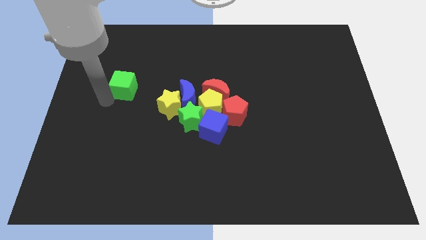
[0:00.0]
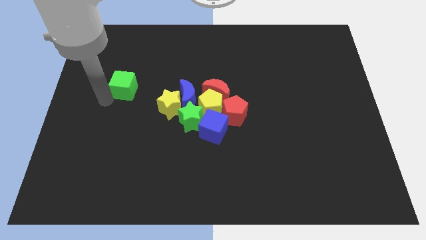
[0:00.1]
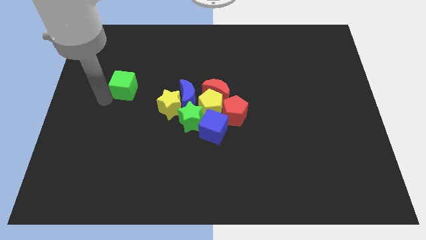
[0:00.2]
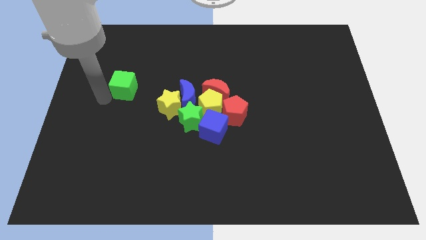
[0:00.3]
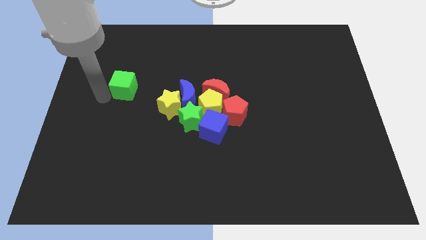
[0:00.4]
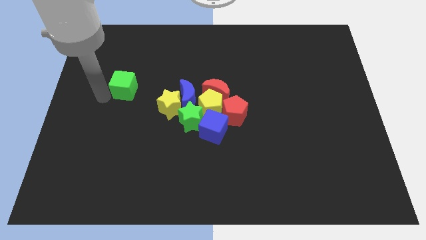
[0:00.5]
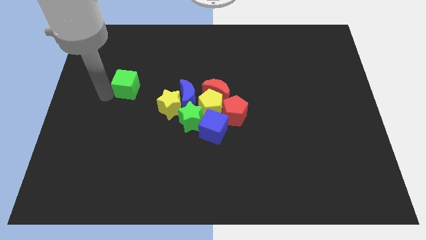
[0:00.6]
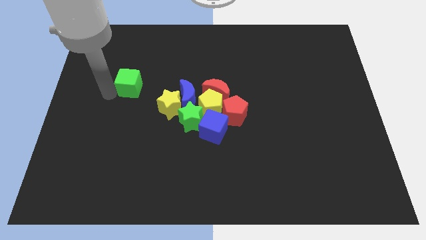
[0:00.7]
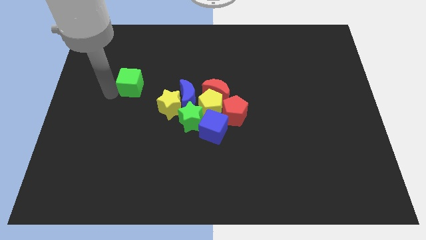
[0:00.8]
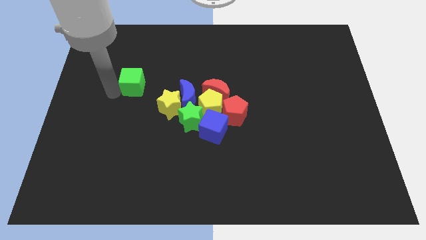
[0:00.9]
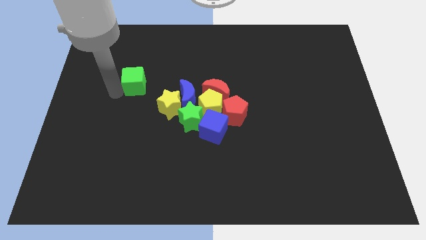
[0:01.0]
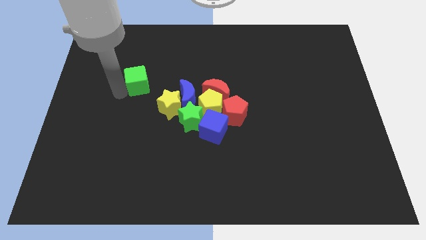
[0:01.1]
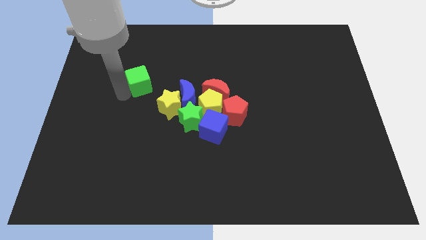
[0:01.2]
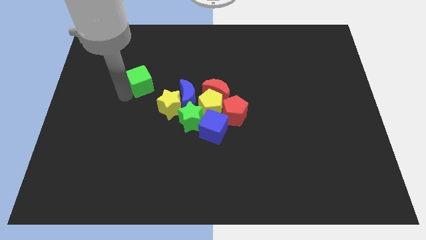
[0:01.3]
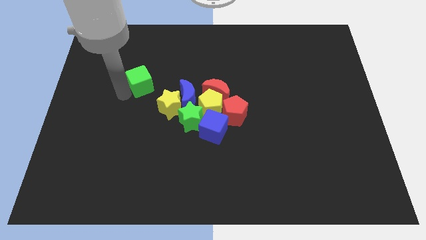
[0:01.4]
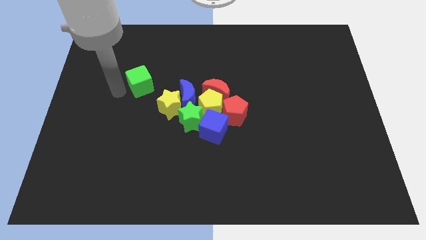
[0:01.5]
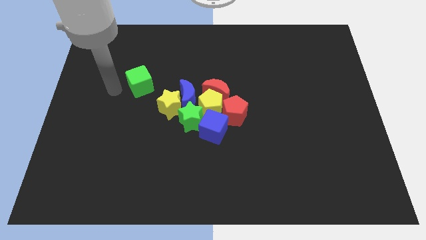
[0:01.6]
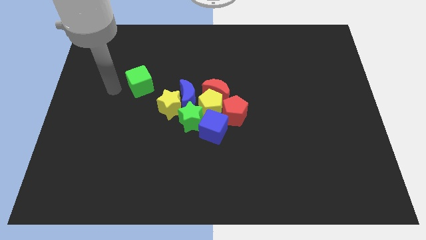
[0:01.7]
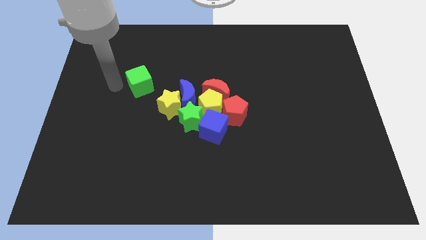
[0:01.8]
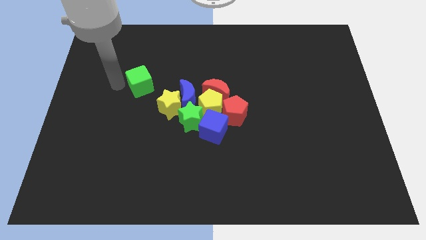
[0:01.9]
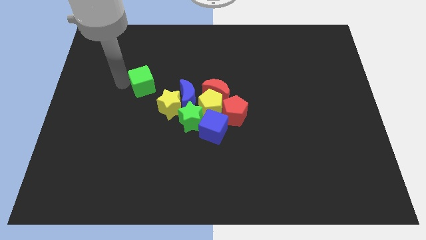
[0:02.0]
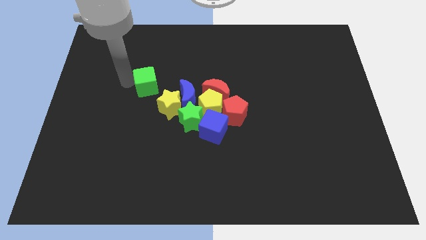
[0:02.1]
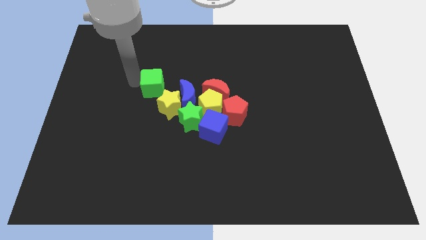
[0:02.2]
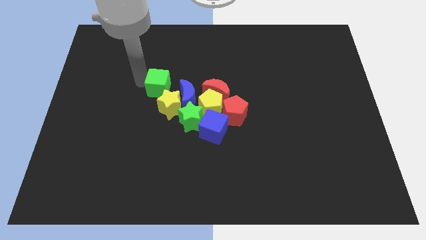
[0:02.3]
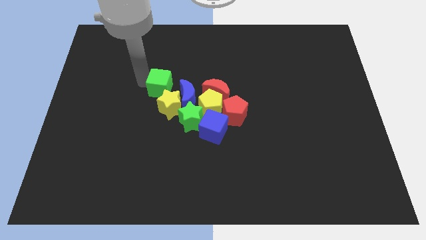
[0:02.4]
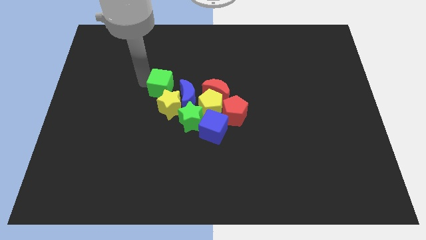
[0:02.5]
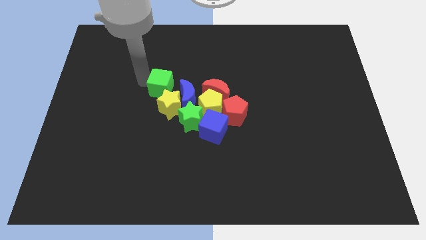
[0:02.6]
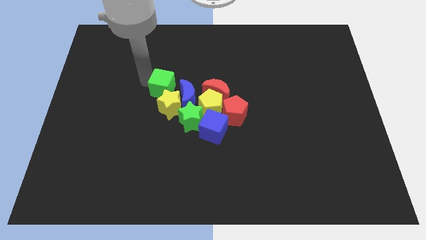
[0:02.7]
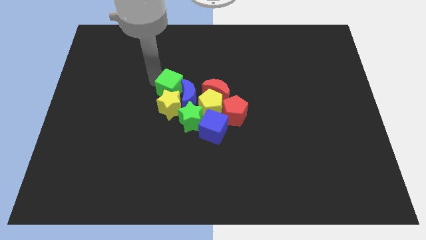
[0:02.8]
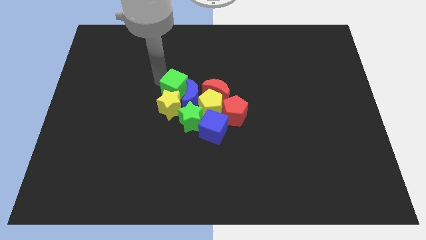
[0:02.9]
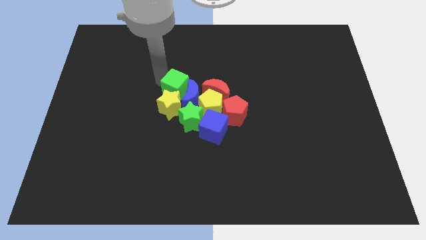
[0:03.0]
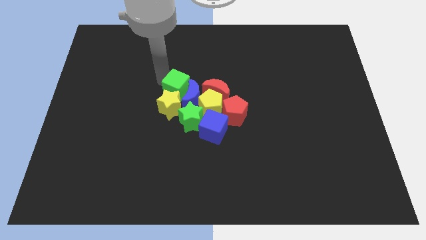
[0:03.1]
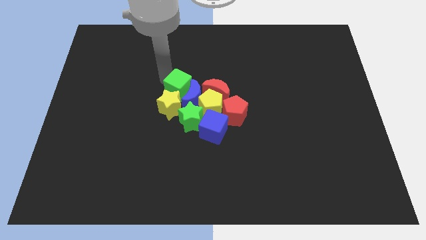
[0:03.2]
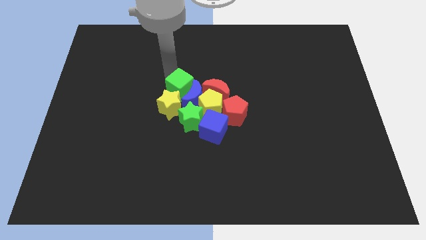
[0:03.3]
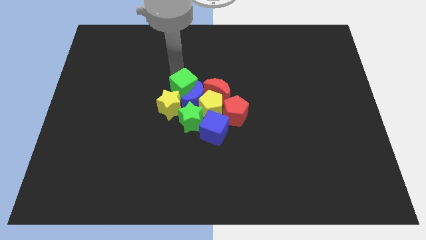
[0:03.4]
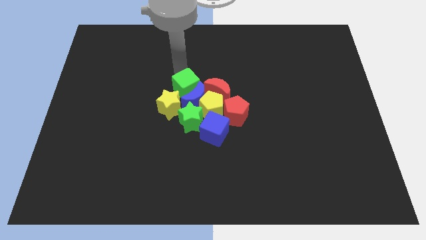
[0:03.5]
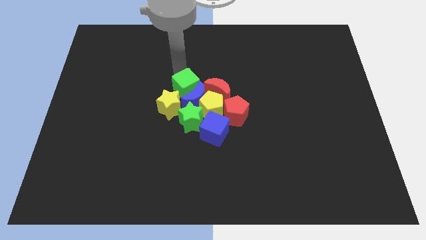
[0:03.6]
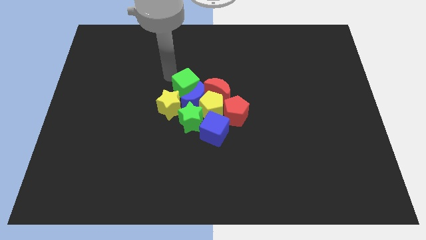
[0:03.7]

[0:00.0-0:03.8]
add the green cube to the group of blocks

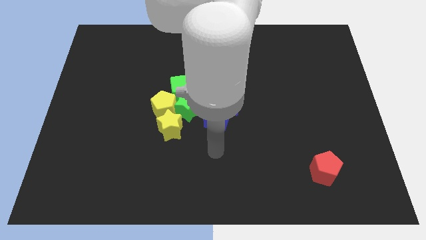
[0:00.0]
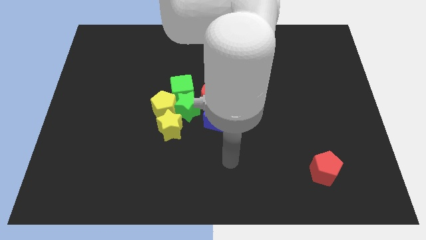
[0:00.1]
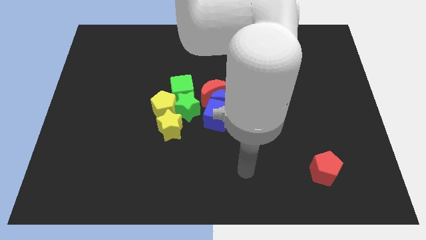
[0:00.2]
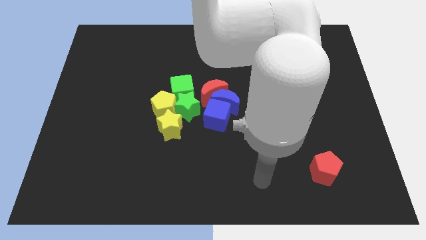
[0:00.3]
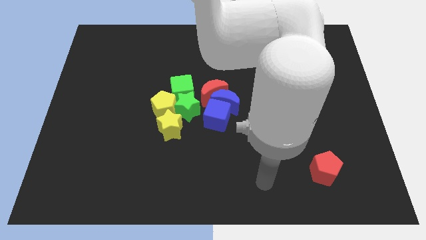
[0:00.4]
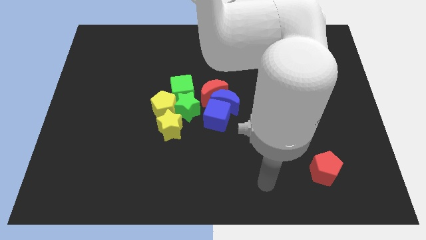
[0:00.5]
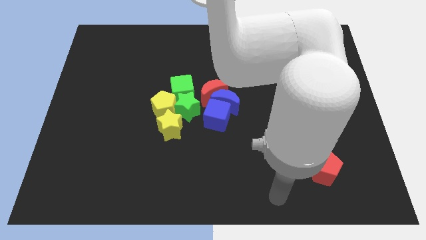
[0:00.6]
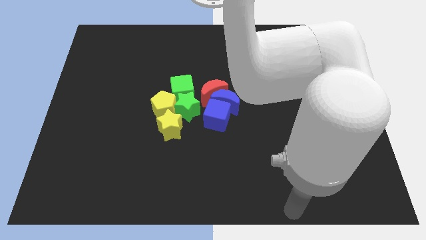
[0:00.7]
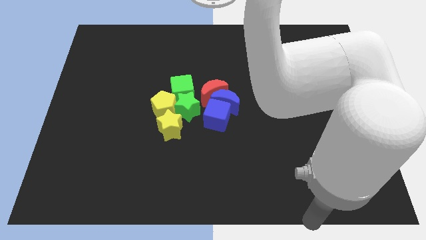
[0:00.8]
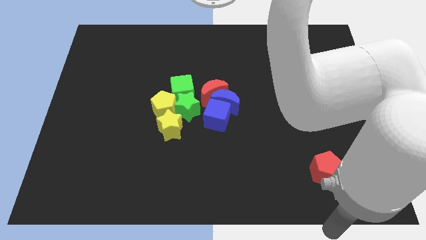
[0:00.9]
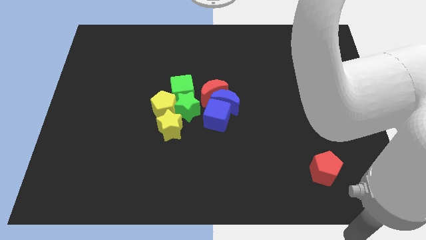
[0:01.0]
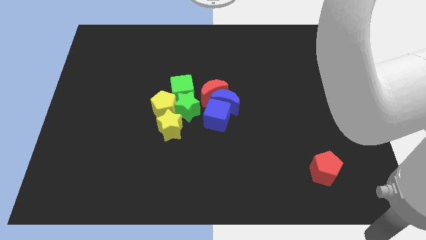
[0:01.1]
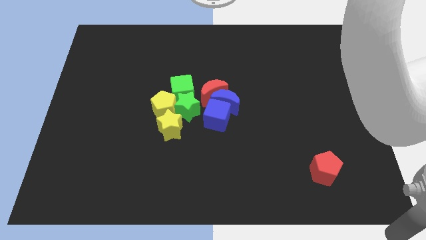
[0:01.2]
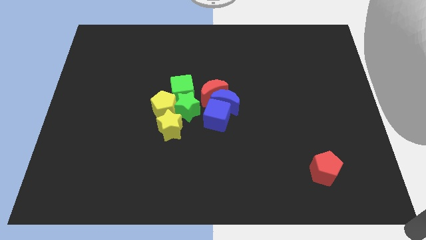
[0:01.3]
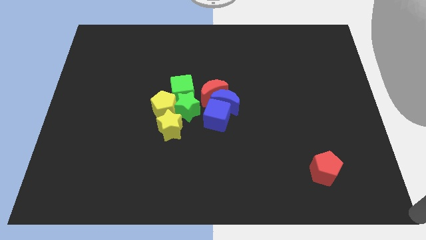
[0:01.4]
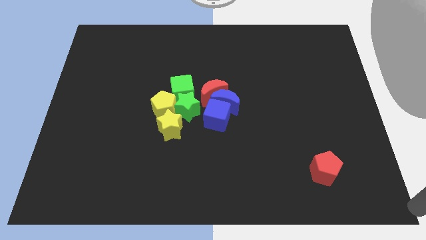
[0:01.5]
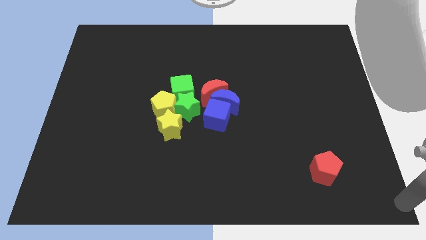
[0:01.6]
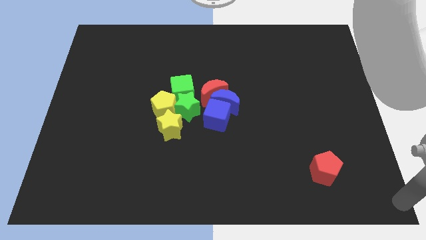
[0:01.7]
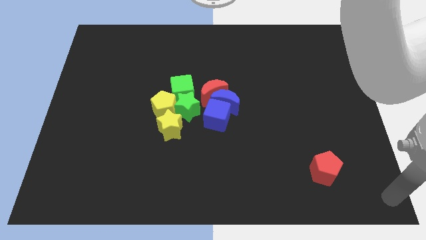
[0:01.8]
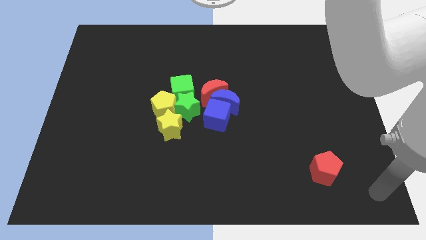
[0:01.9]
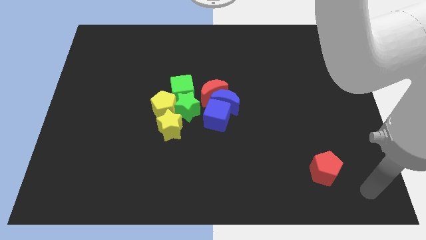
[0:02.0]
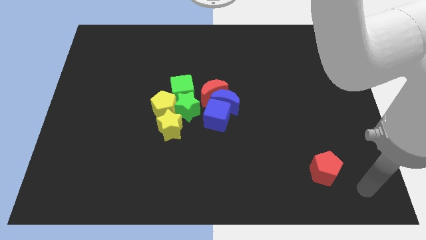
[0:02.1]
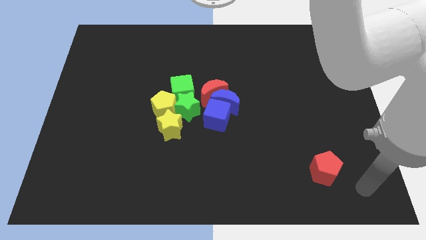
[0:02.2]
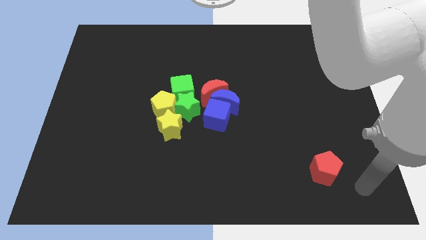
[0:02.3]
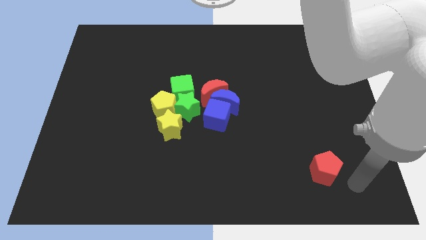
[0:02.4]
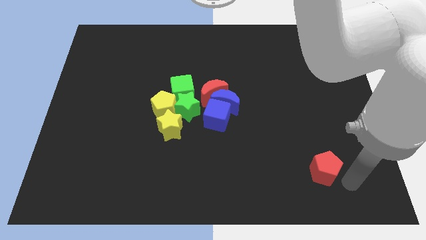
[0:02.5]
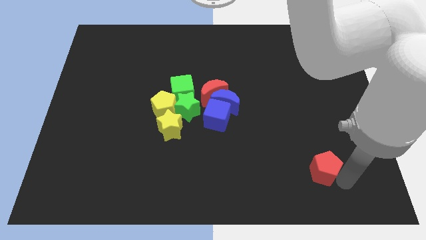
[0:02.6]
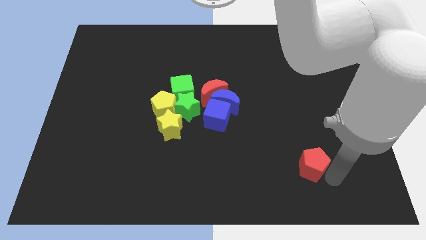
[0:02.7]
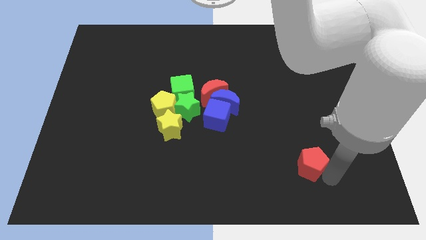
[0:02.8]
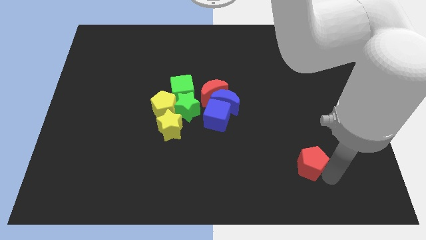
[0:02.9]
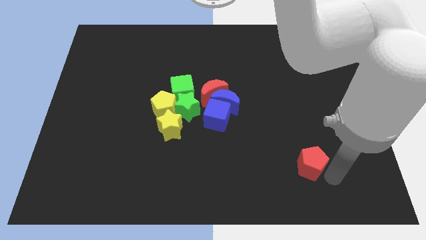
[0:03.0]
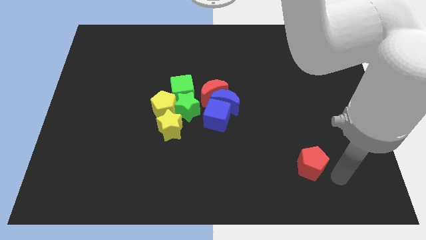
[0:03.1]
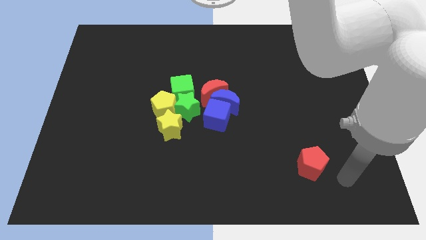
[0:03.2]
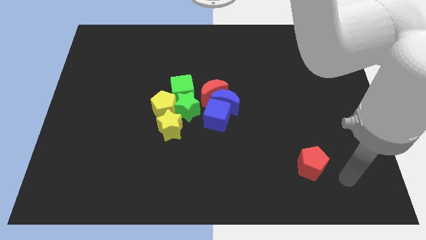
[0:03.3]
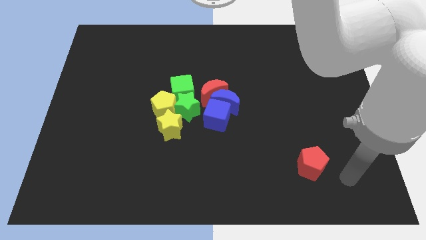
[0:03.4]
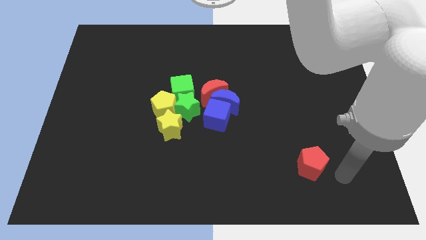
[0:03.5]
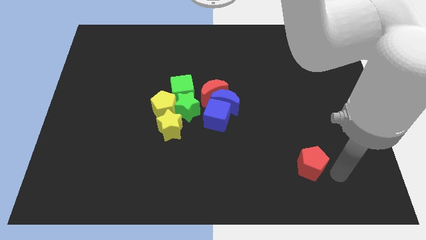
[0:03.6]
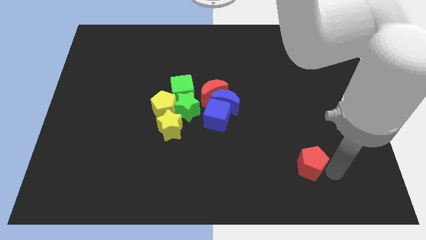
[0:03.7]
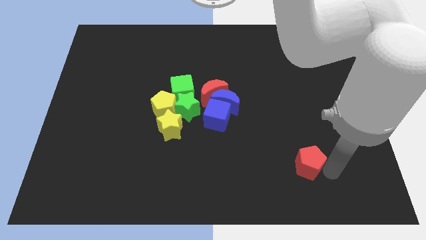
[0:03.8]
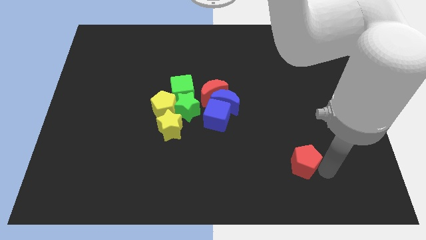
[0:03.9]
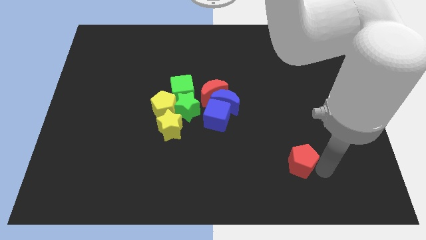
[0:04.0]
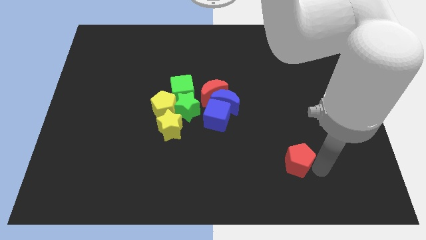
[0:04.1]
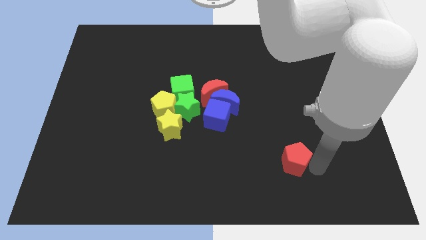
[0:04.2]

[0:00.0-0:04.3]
move the red pentagon to the left of the board

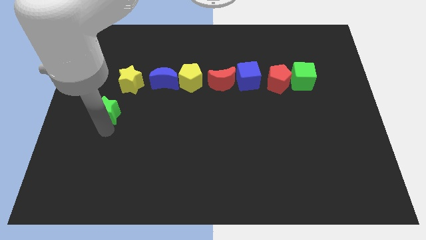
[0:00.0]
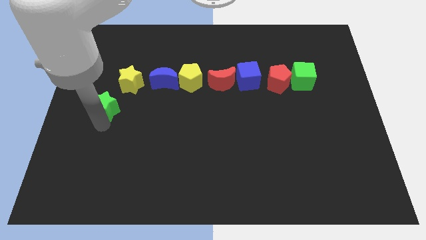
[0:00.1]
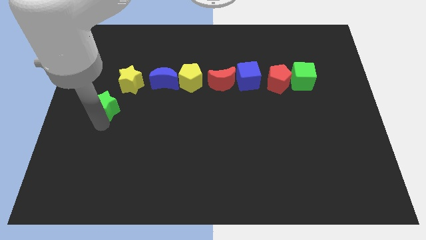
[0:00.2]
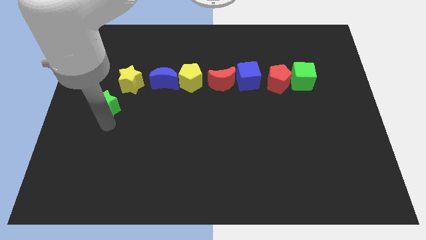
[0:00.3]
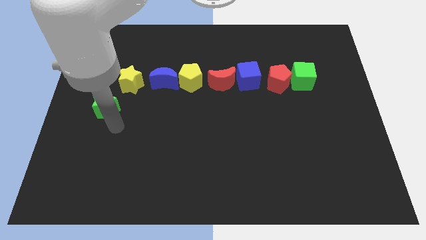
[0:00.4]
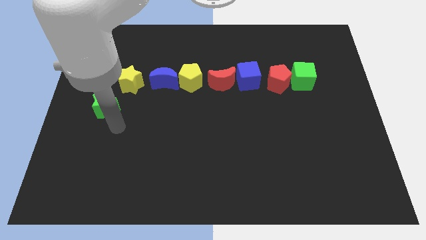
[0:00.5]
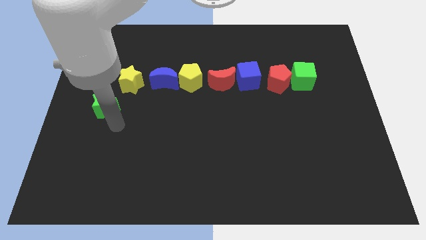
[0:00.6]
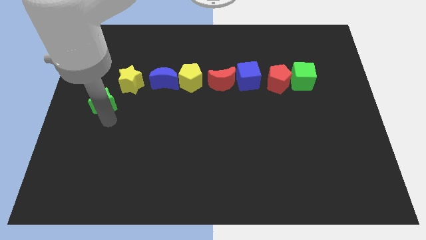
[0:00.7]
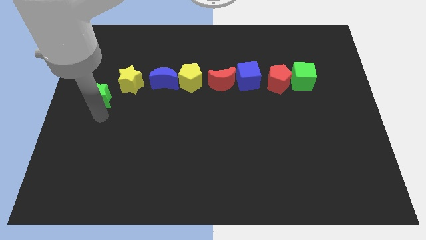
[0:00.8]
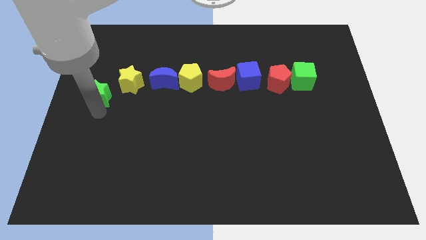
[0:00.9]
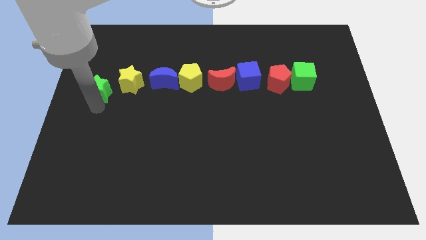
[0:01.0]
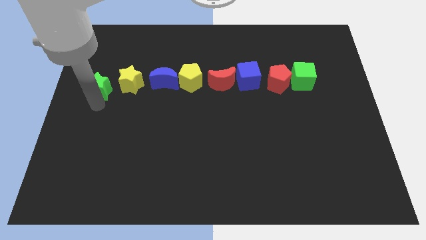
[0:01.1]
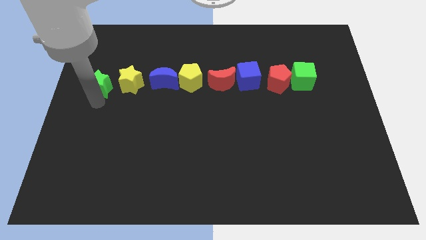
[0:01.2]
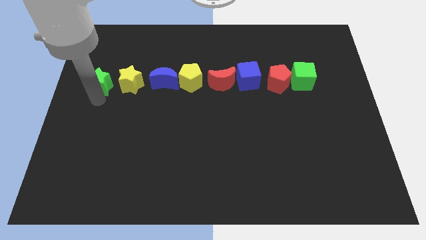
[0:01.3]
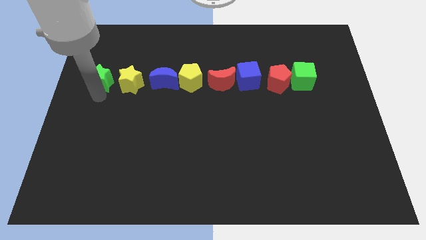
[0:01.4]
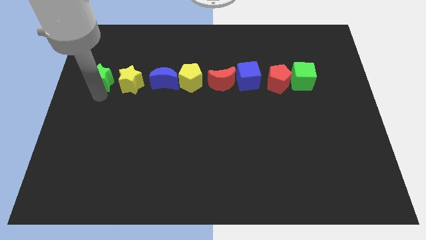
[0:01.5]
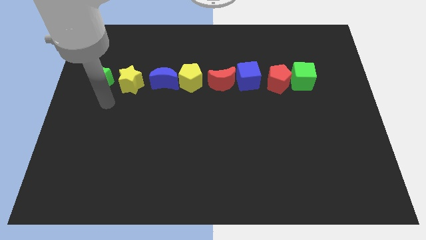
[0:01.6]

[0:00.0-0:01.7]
push the green to the left of the yellow star
